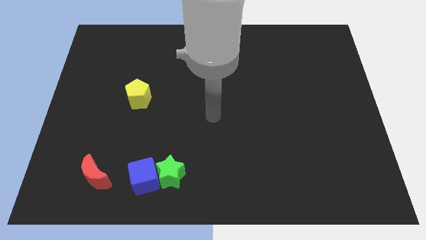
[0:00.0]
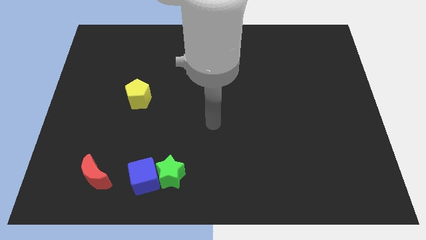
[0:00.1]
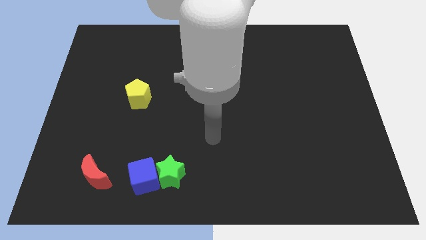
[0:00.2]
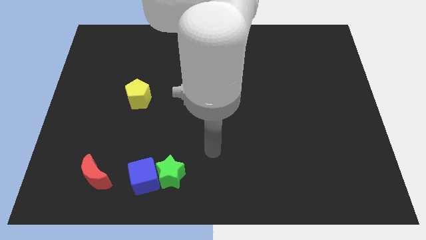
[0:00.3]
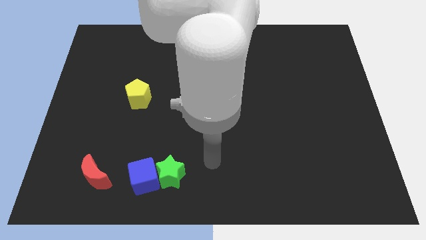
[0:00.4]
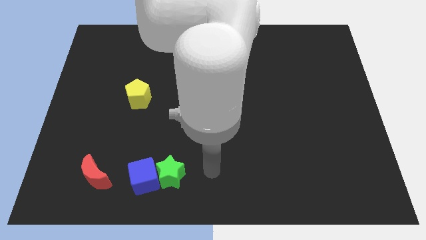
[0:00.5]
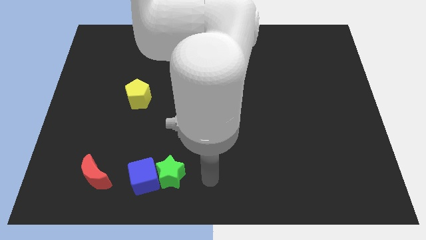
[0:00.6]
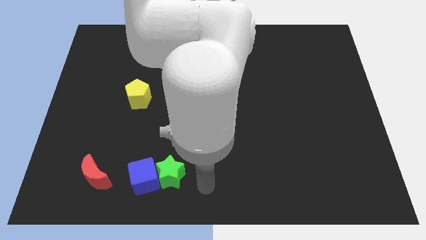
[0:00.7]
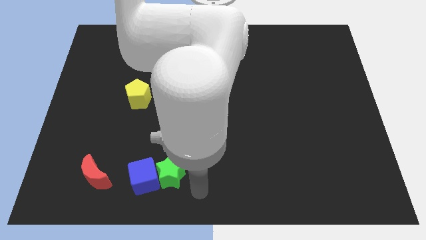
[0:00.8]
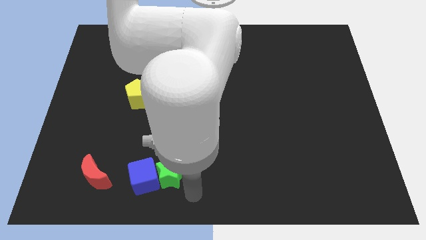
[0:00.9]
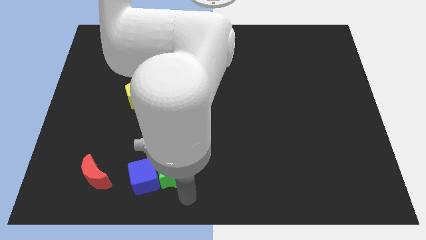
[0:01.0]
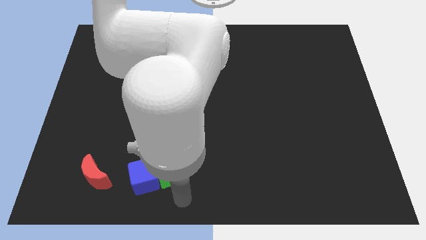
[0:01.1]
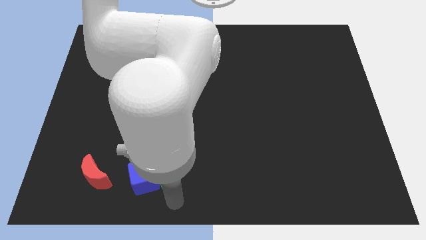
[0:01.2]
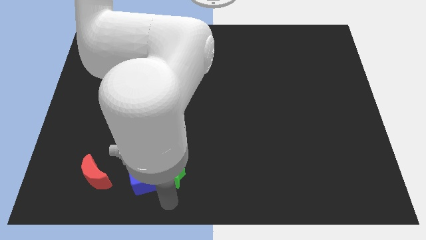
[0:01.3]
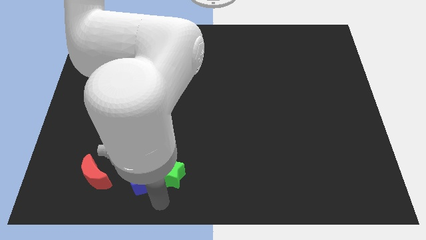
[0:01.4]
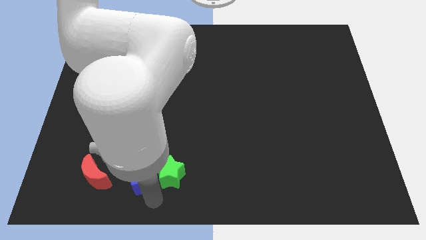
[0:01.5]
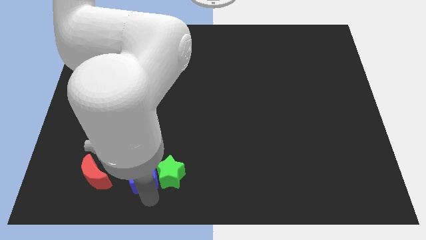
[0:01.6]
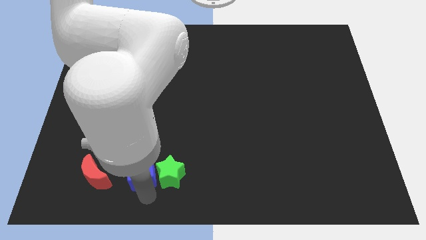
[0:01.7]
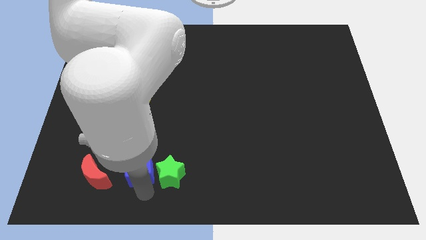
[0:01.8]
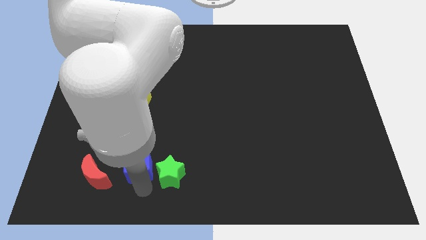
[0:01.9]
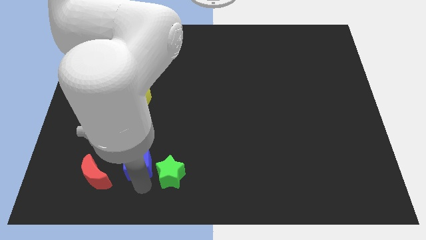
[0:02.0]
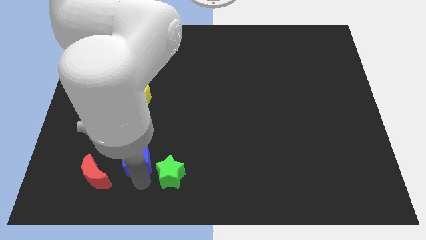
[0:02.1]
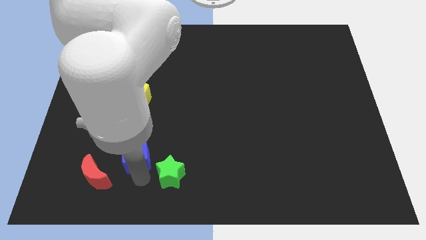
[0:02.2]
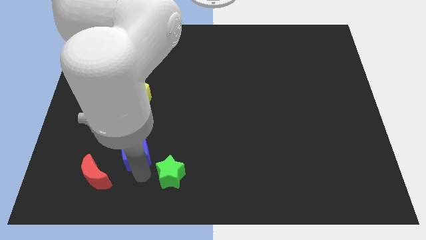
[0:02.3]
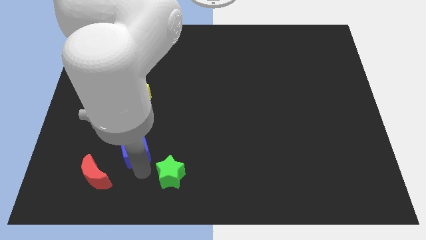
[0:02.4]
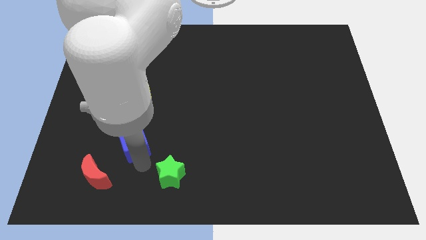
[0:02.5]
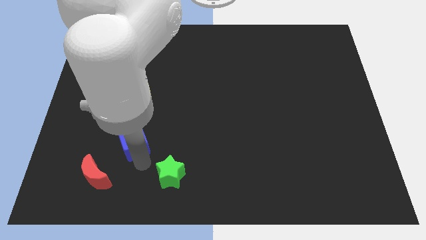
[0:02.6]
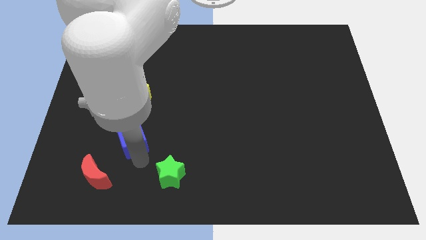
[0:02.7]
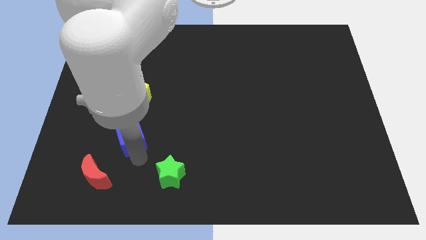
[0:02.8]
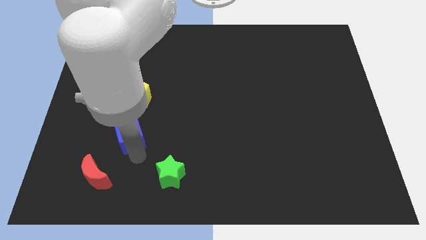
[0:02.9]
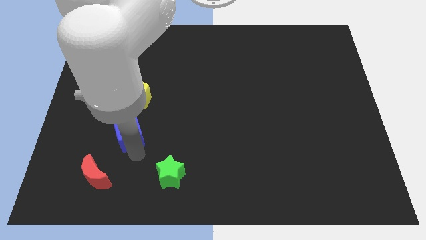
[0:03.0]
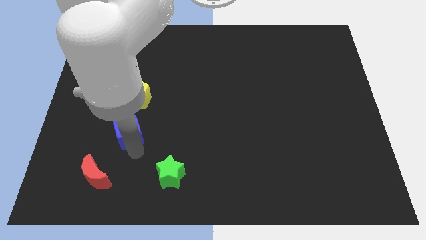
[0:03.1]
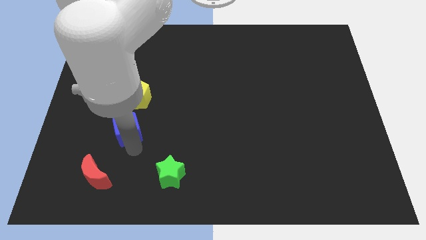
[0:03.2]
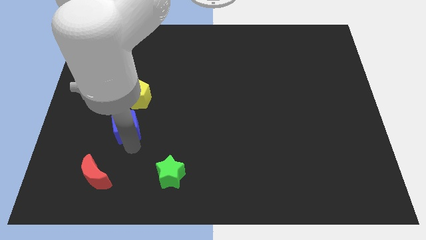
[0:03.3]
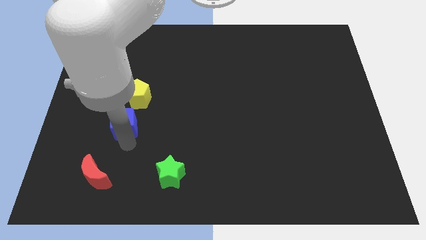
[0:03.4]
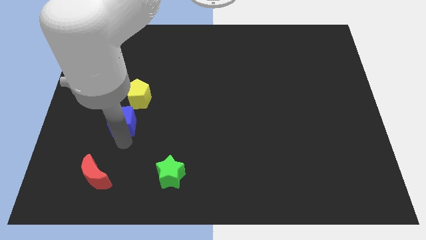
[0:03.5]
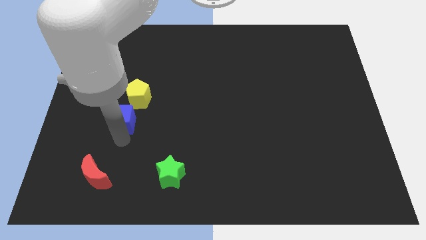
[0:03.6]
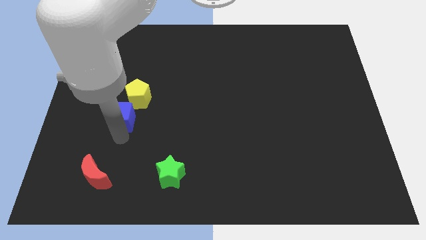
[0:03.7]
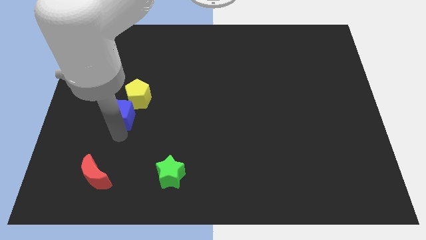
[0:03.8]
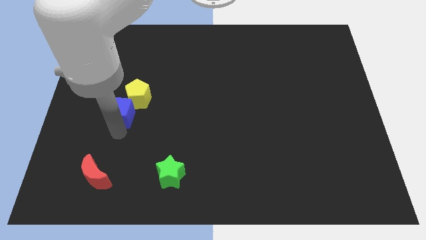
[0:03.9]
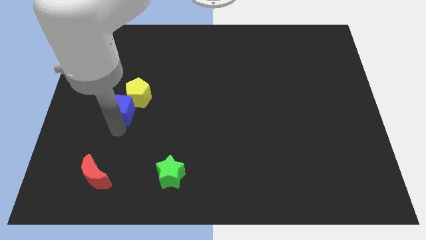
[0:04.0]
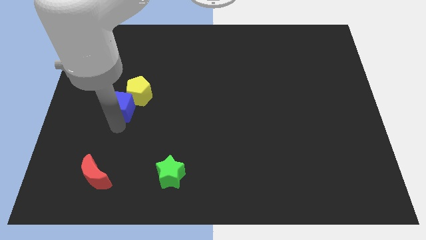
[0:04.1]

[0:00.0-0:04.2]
move the blue cube towards the pentagon

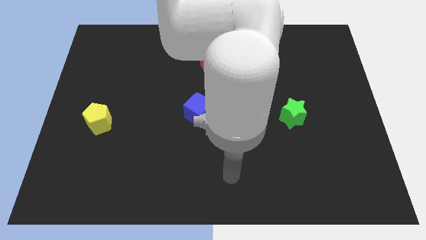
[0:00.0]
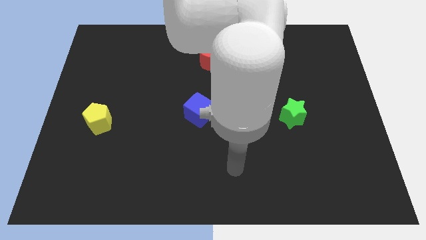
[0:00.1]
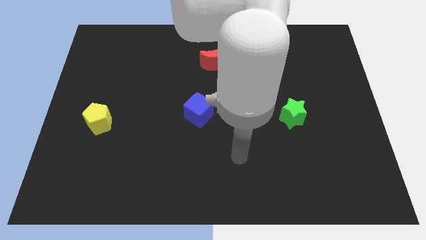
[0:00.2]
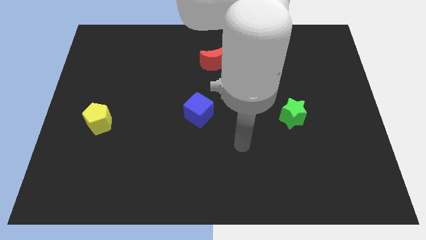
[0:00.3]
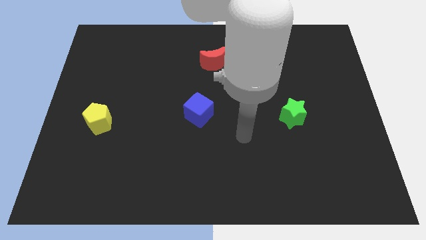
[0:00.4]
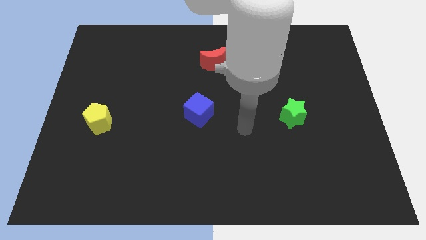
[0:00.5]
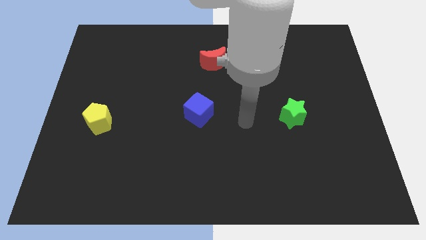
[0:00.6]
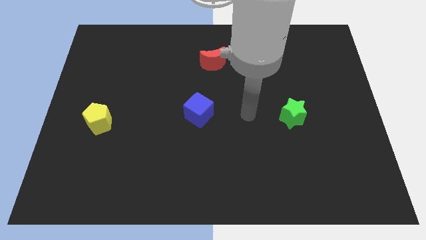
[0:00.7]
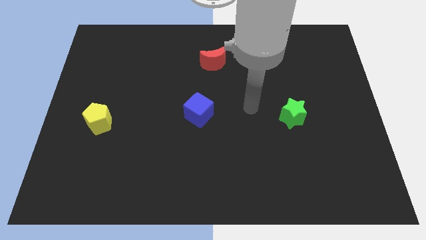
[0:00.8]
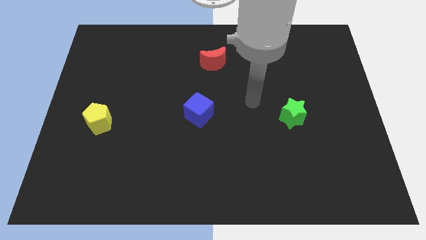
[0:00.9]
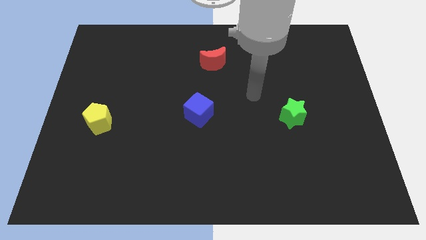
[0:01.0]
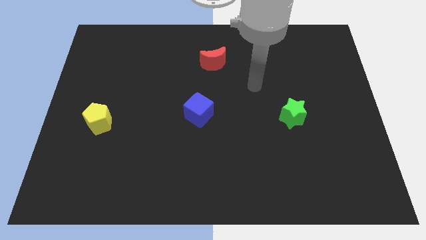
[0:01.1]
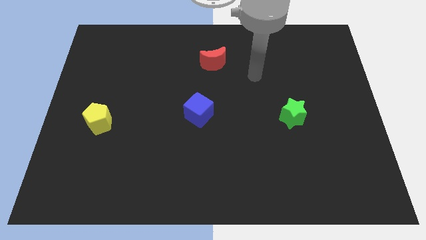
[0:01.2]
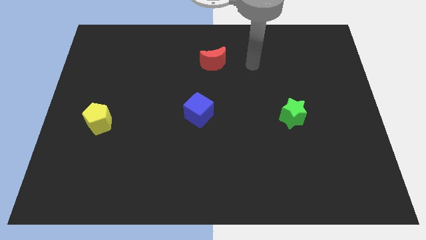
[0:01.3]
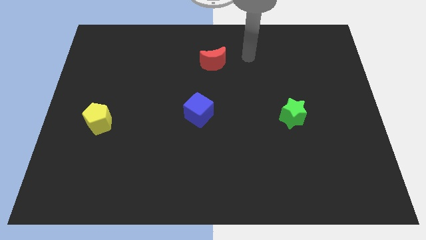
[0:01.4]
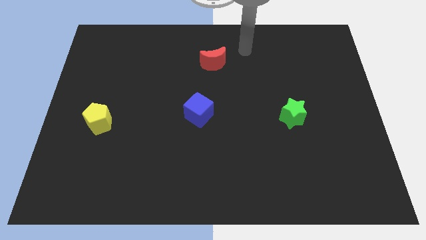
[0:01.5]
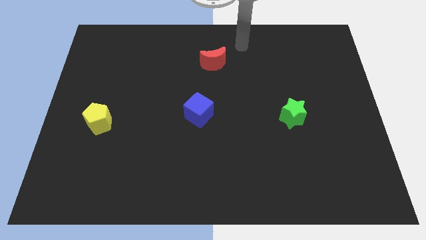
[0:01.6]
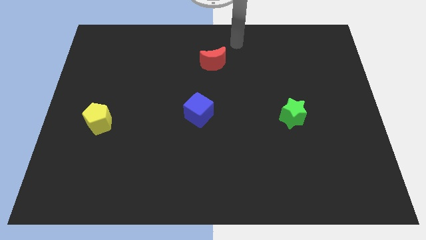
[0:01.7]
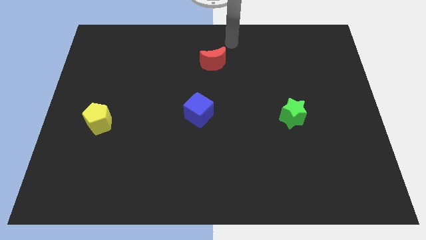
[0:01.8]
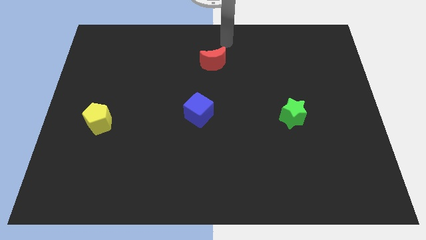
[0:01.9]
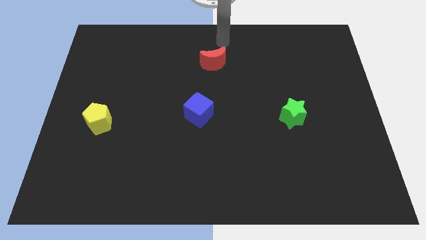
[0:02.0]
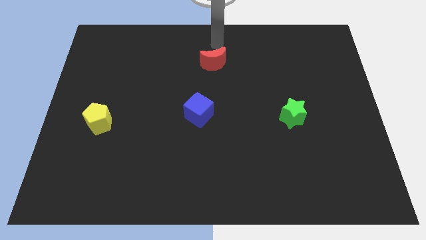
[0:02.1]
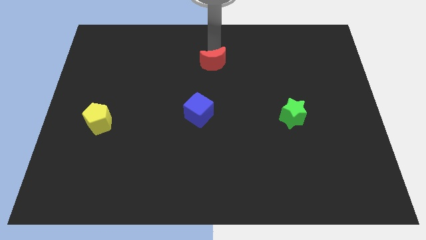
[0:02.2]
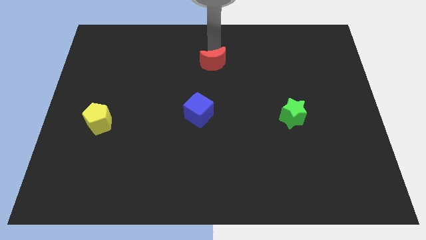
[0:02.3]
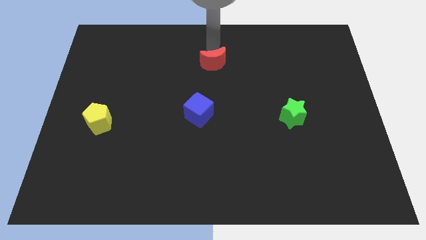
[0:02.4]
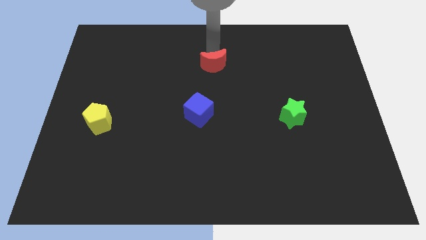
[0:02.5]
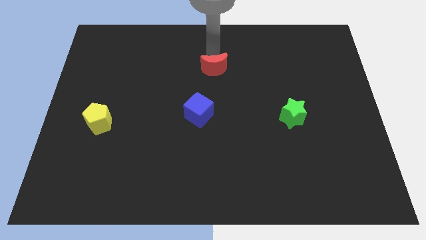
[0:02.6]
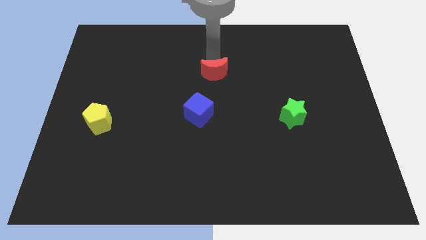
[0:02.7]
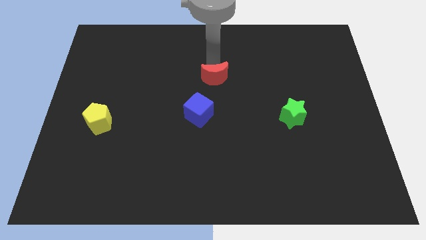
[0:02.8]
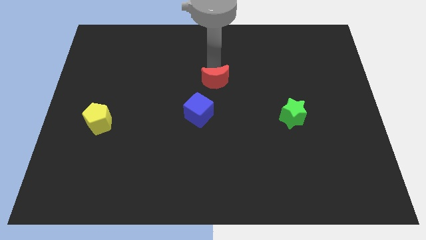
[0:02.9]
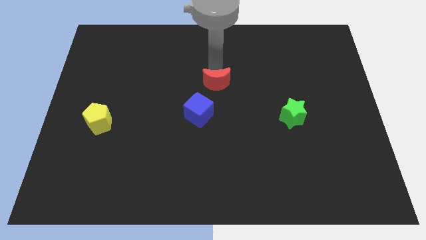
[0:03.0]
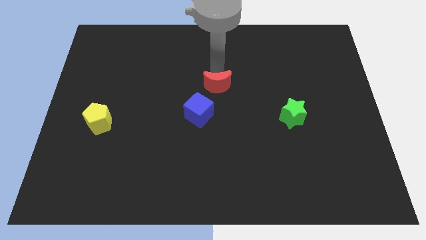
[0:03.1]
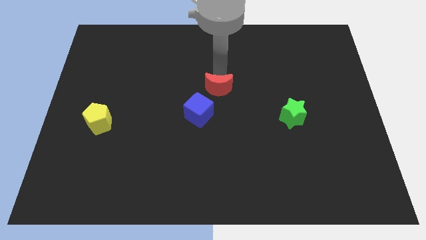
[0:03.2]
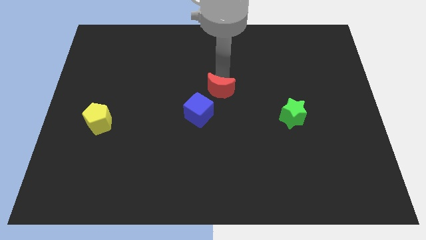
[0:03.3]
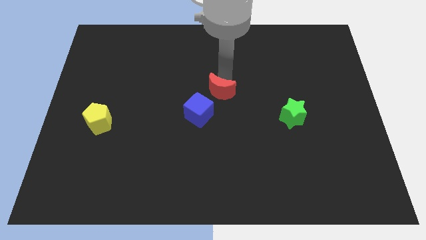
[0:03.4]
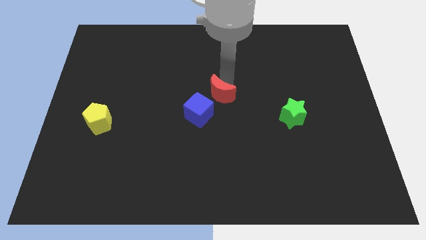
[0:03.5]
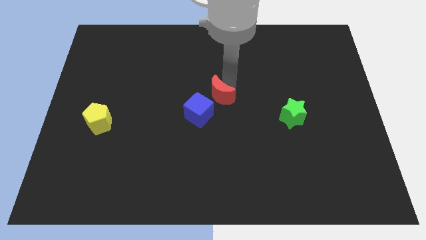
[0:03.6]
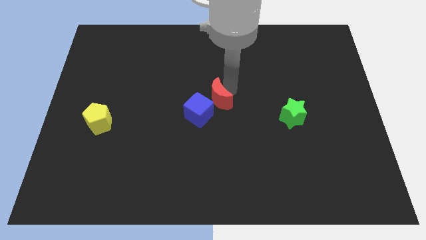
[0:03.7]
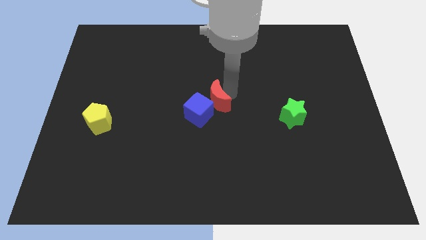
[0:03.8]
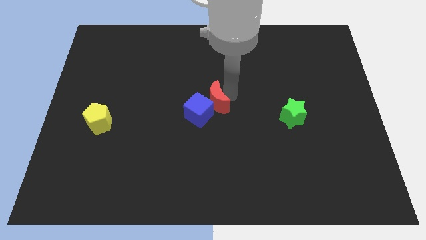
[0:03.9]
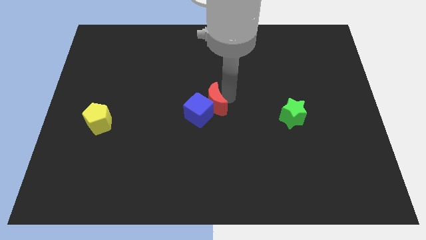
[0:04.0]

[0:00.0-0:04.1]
put the red moon close to the blue block
